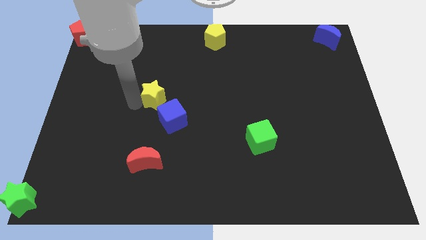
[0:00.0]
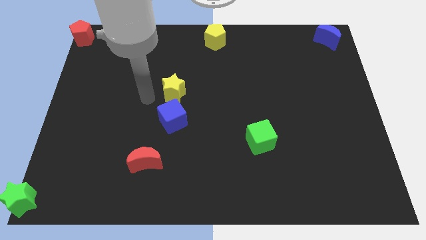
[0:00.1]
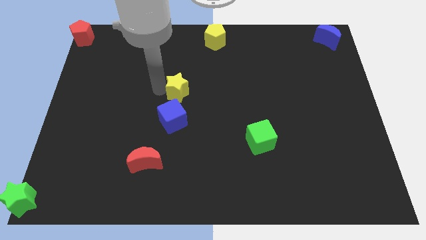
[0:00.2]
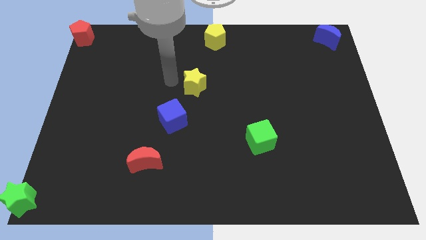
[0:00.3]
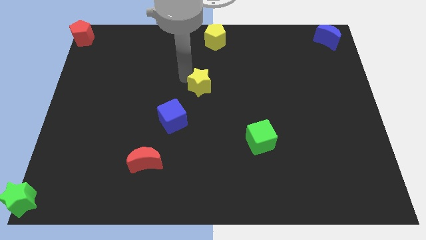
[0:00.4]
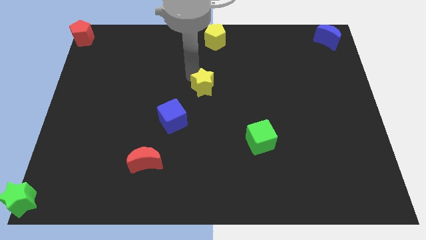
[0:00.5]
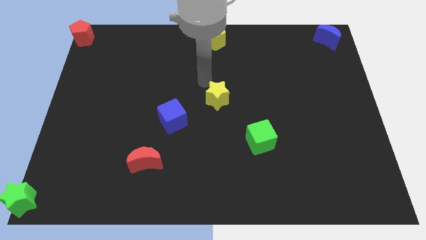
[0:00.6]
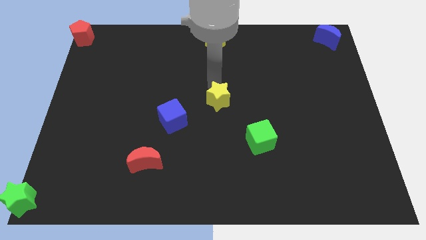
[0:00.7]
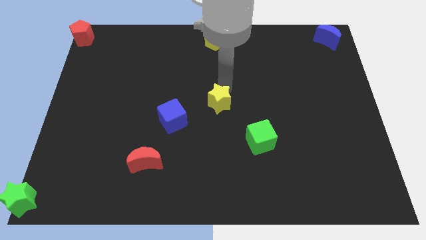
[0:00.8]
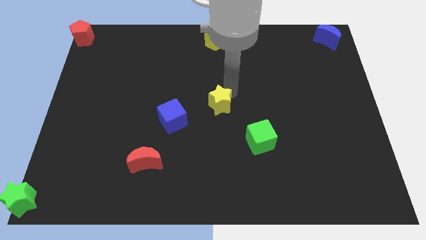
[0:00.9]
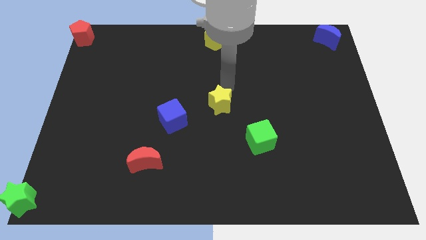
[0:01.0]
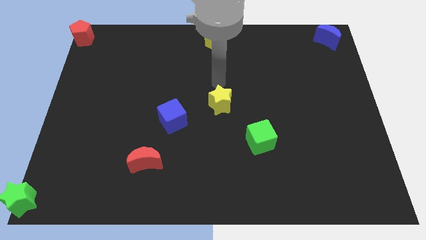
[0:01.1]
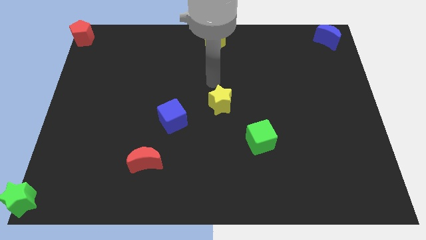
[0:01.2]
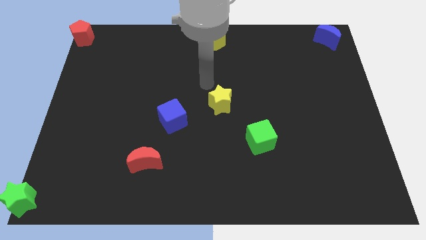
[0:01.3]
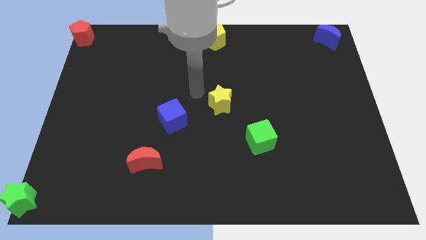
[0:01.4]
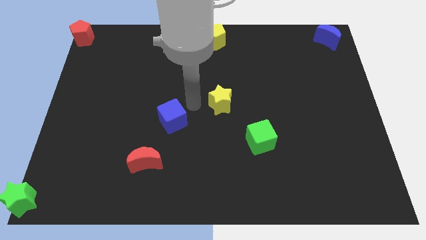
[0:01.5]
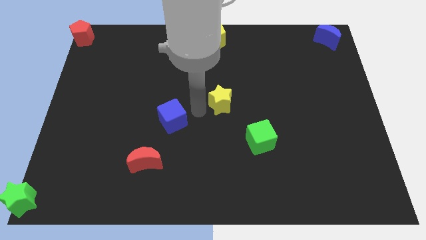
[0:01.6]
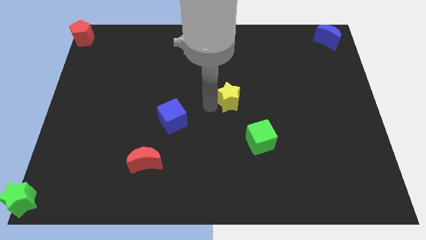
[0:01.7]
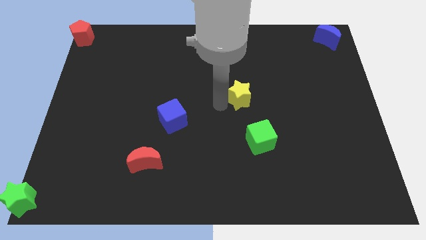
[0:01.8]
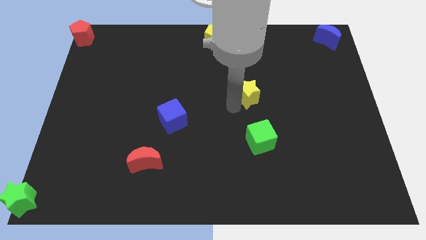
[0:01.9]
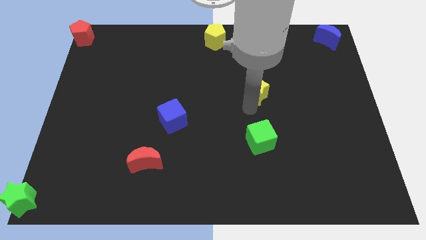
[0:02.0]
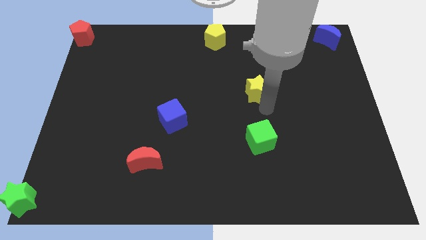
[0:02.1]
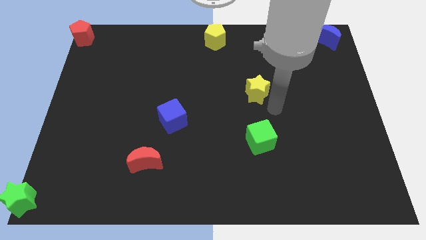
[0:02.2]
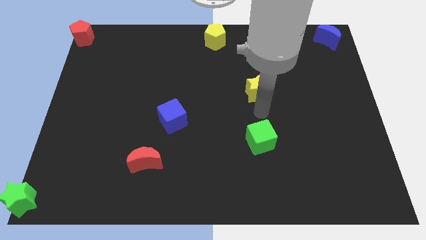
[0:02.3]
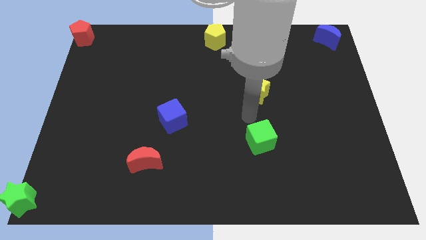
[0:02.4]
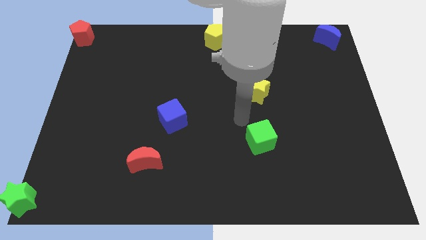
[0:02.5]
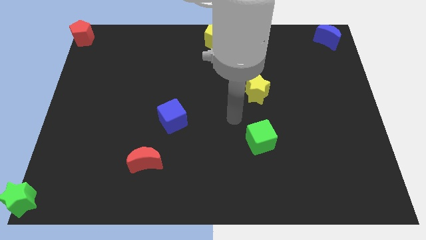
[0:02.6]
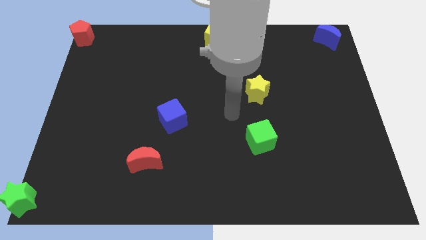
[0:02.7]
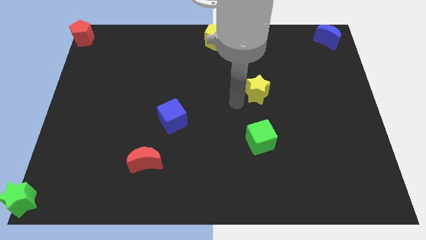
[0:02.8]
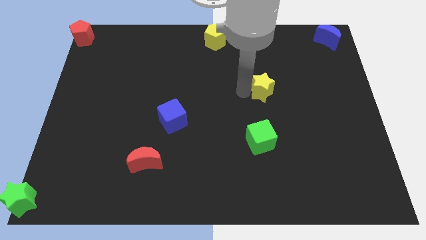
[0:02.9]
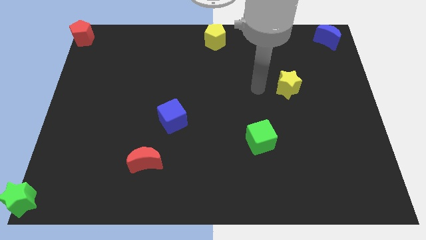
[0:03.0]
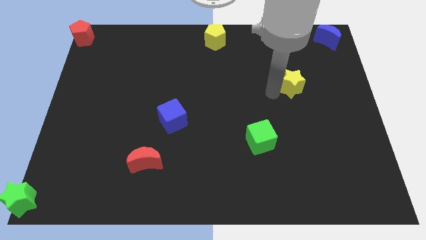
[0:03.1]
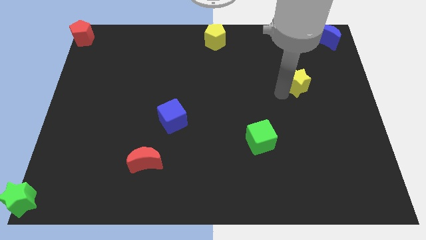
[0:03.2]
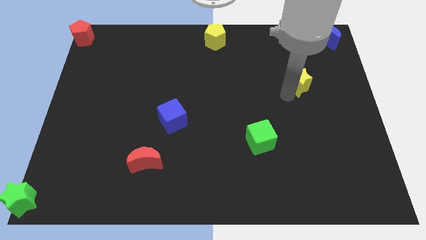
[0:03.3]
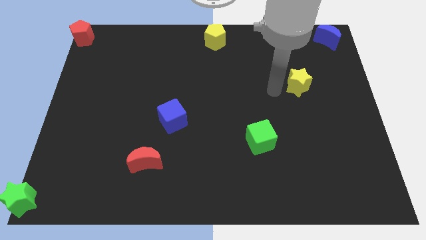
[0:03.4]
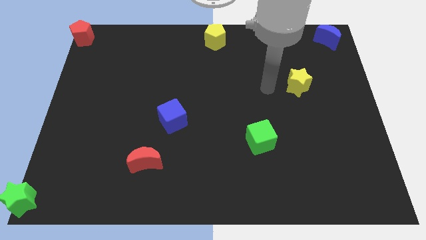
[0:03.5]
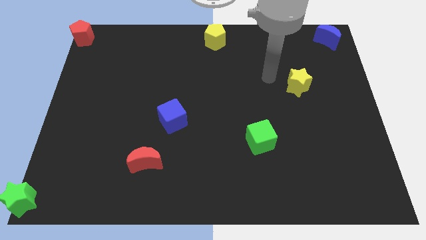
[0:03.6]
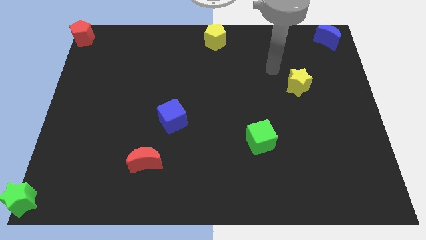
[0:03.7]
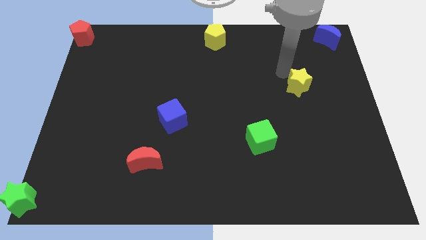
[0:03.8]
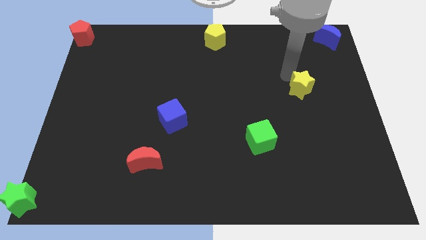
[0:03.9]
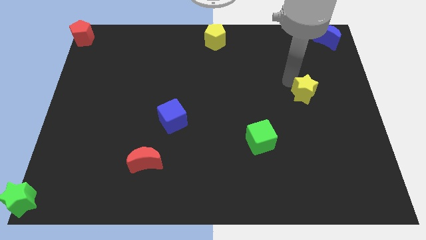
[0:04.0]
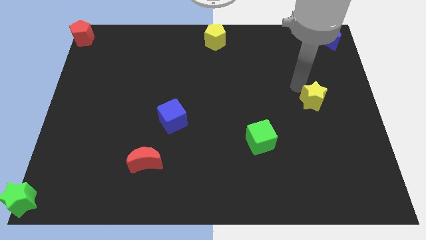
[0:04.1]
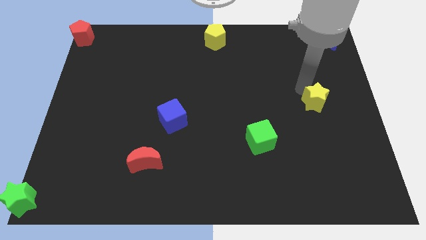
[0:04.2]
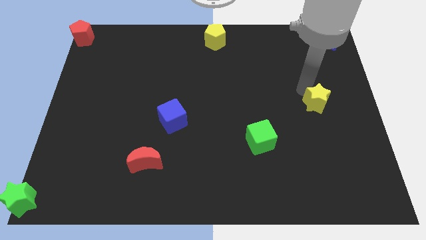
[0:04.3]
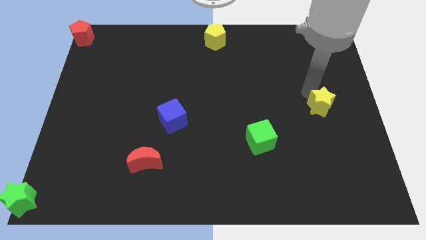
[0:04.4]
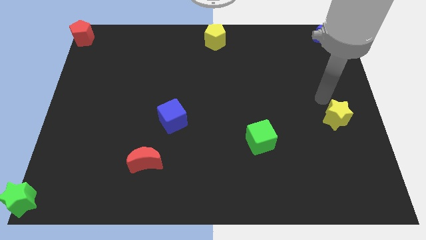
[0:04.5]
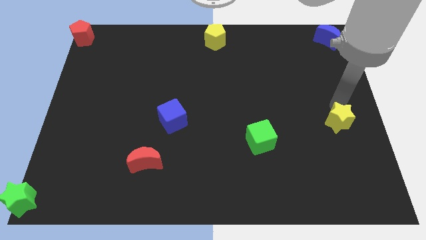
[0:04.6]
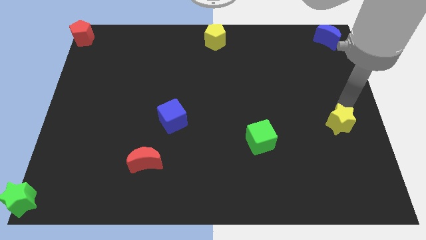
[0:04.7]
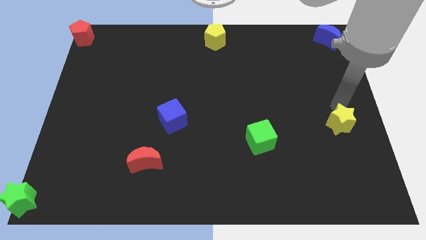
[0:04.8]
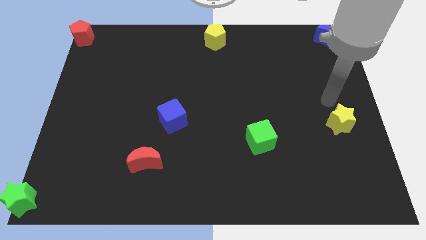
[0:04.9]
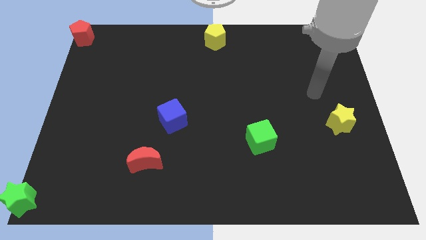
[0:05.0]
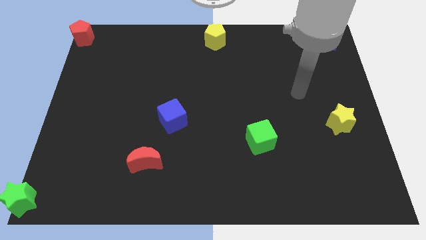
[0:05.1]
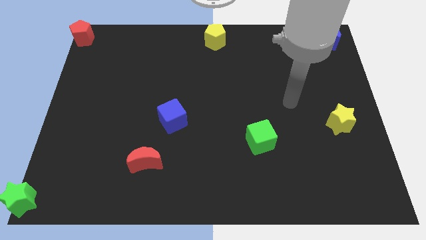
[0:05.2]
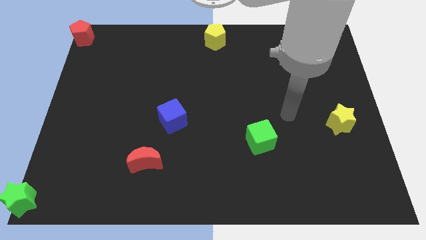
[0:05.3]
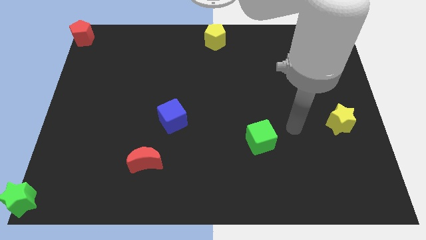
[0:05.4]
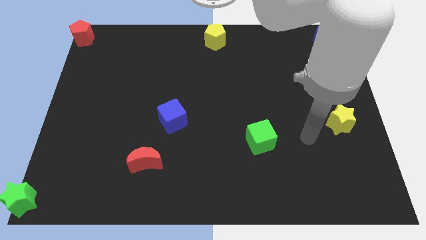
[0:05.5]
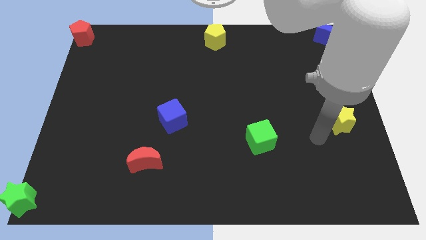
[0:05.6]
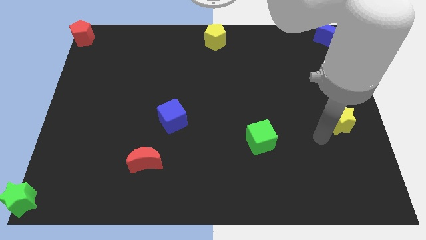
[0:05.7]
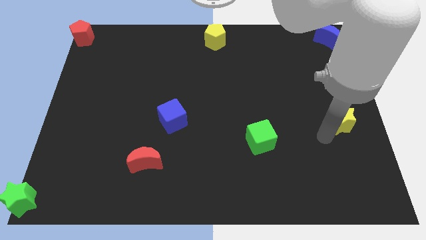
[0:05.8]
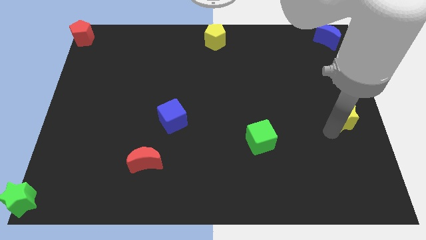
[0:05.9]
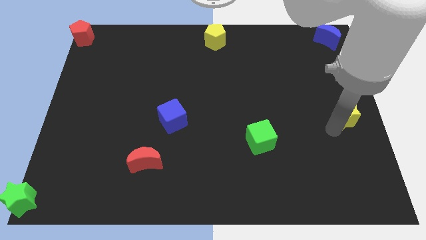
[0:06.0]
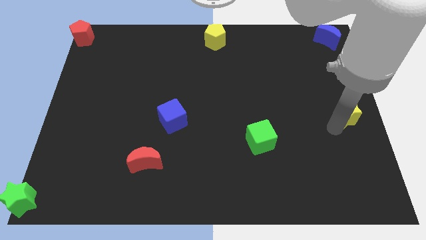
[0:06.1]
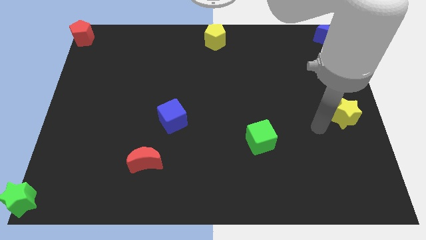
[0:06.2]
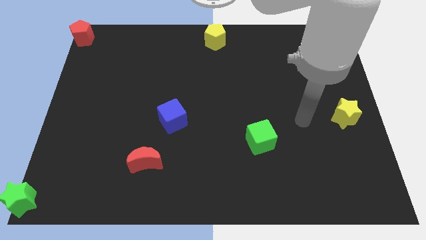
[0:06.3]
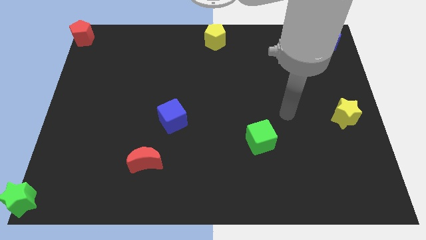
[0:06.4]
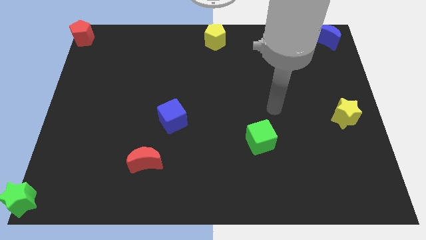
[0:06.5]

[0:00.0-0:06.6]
move the yellow star to the center right

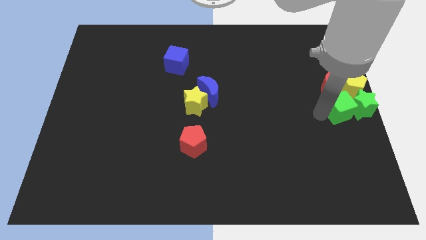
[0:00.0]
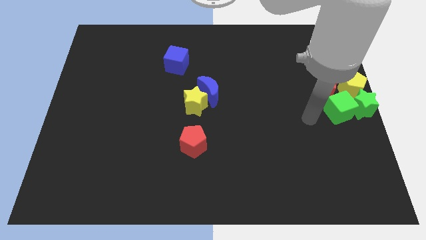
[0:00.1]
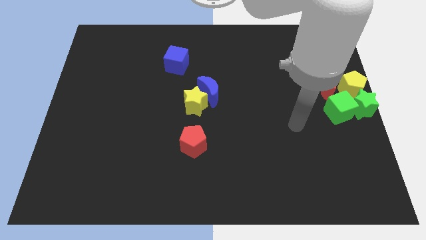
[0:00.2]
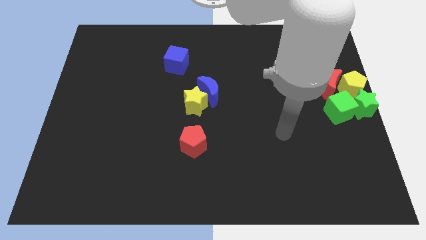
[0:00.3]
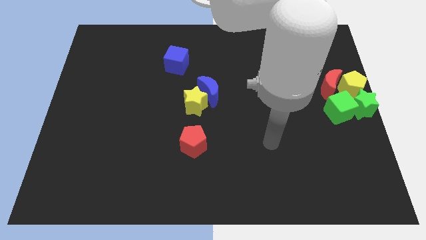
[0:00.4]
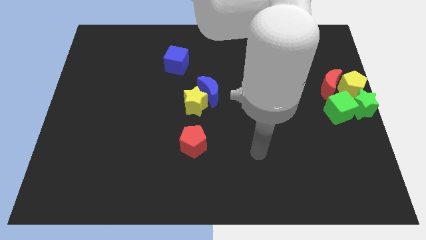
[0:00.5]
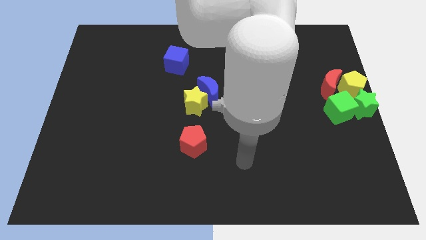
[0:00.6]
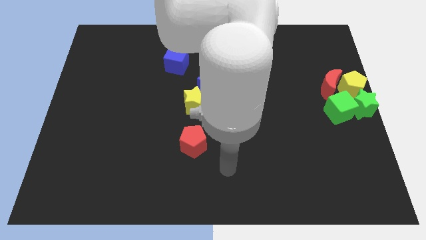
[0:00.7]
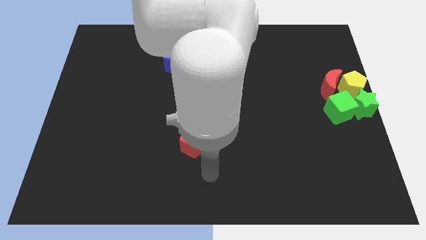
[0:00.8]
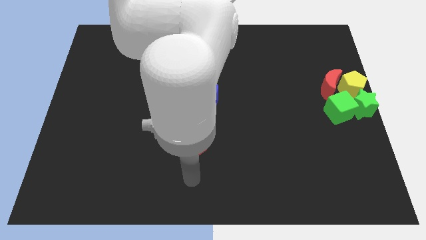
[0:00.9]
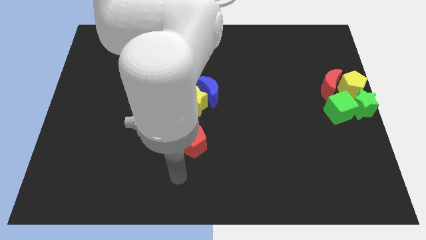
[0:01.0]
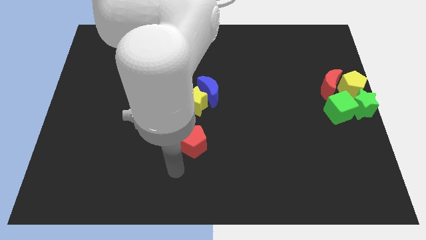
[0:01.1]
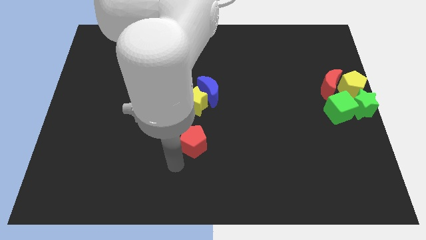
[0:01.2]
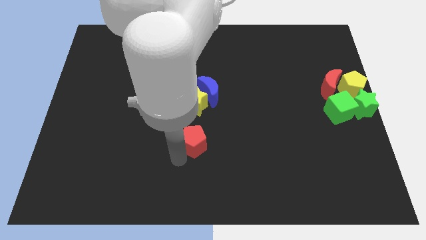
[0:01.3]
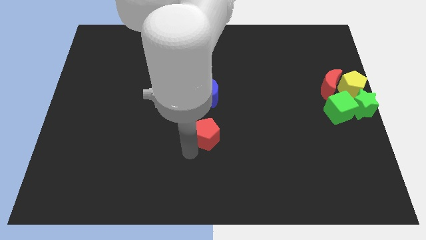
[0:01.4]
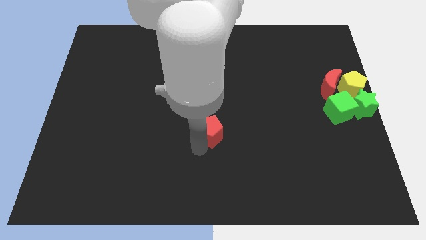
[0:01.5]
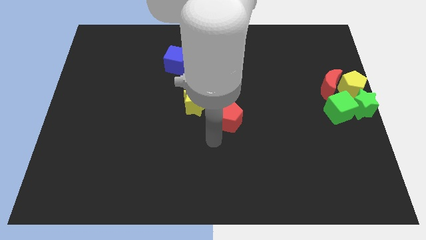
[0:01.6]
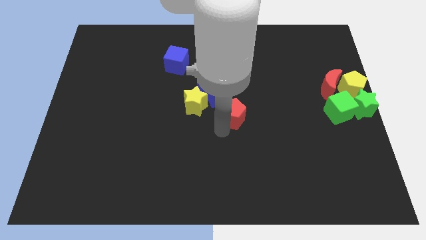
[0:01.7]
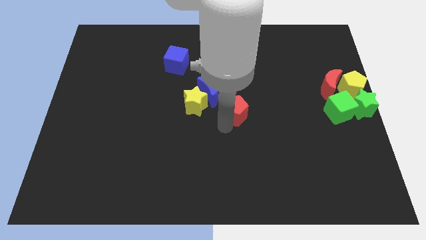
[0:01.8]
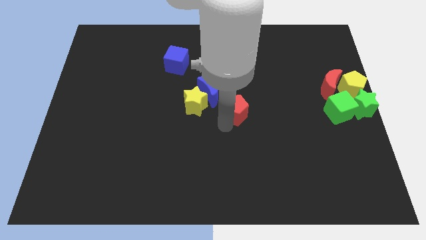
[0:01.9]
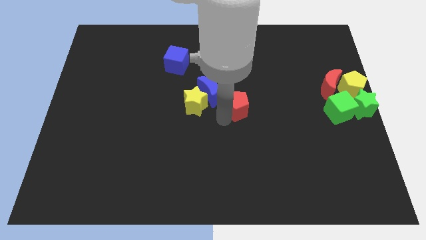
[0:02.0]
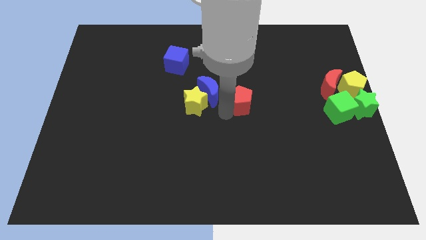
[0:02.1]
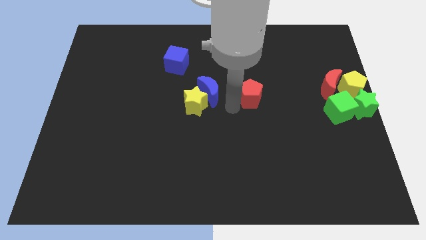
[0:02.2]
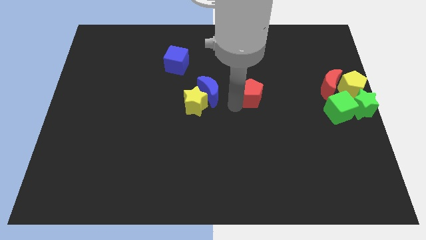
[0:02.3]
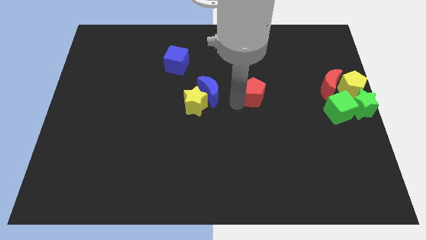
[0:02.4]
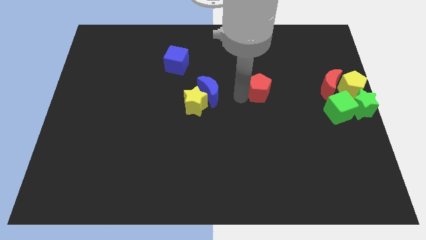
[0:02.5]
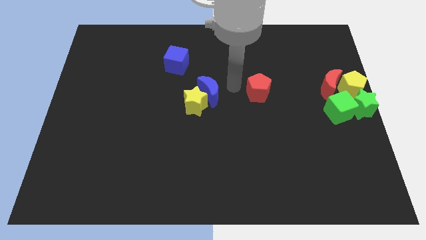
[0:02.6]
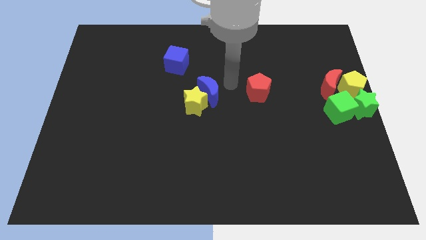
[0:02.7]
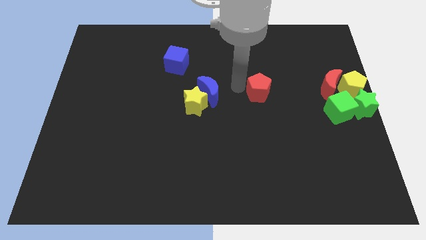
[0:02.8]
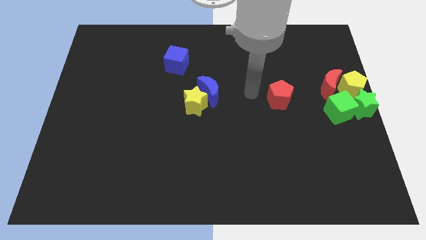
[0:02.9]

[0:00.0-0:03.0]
place the red pentagon at right side of the blue crescent
